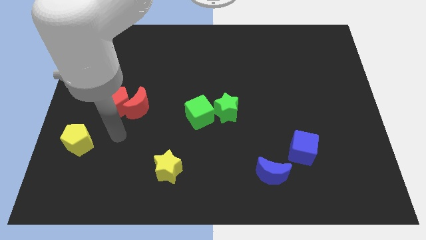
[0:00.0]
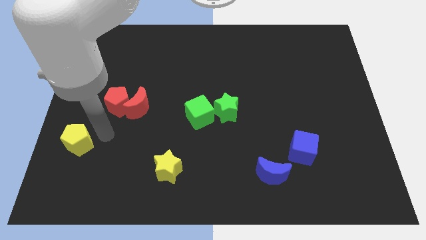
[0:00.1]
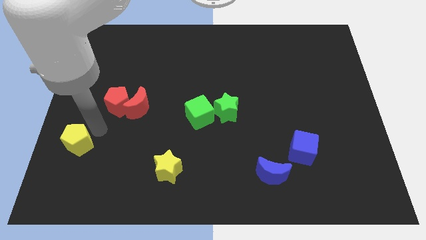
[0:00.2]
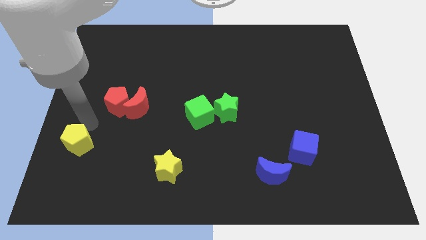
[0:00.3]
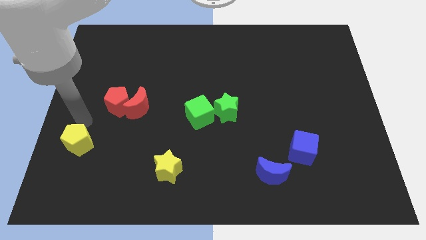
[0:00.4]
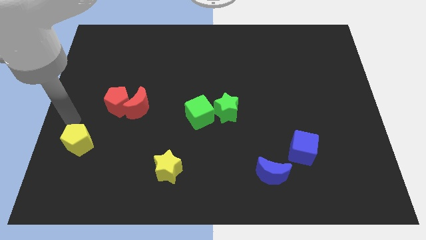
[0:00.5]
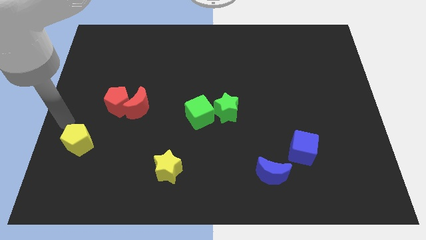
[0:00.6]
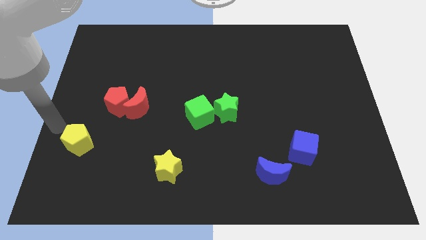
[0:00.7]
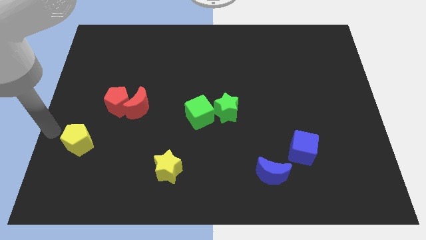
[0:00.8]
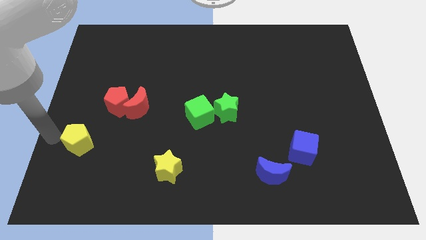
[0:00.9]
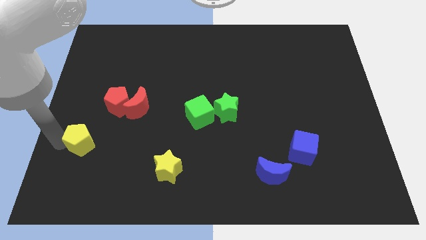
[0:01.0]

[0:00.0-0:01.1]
move the arm at the left side of the yellow pentagon

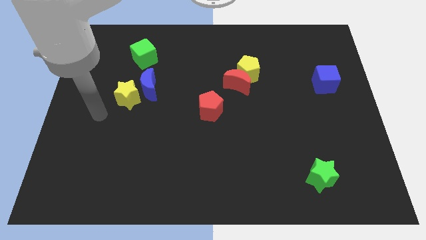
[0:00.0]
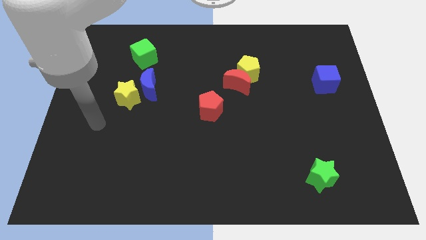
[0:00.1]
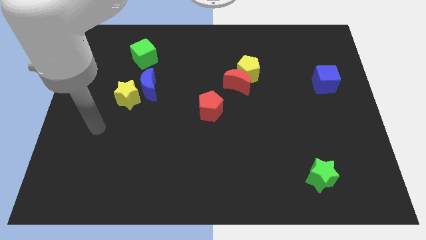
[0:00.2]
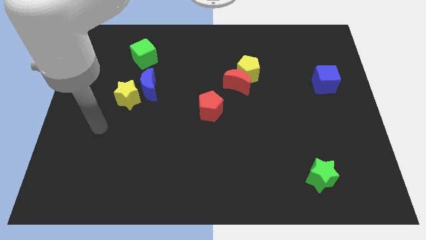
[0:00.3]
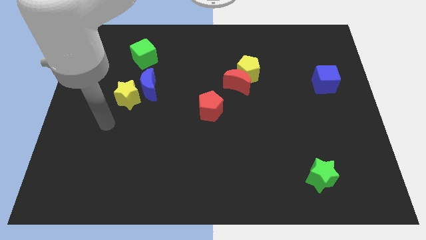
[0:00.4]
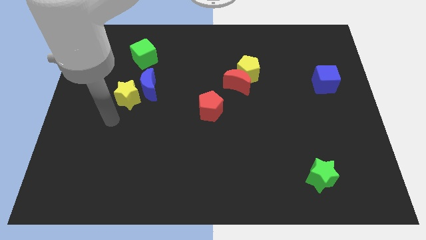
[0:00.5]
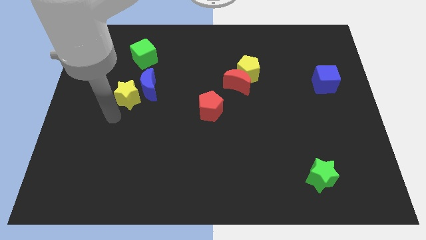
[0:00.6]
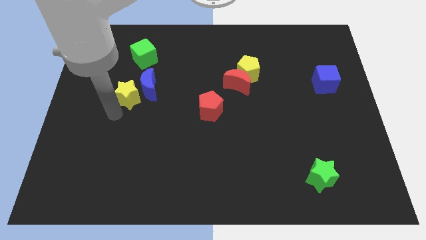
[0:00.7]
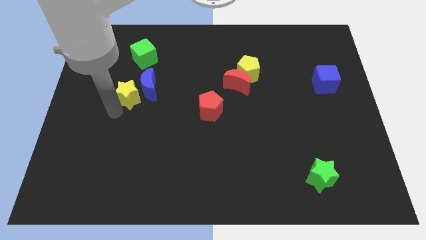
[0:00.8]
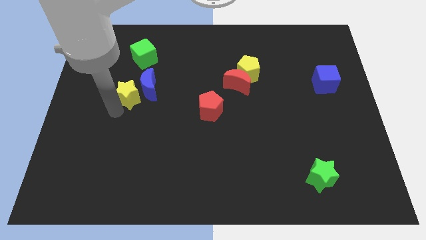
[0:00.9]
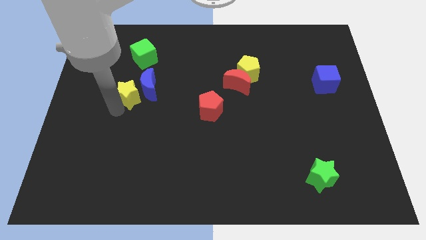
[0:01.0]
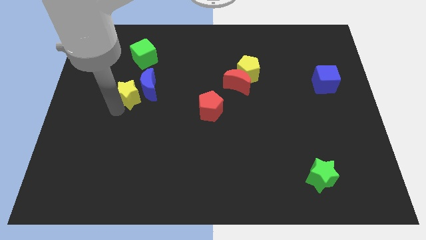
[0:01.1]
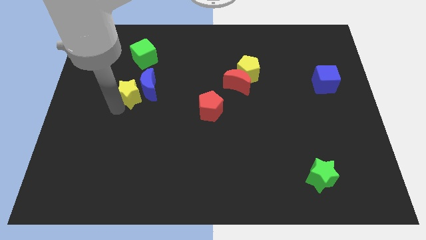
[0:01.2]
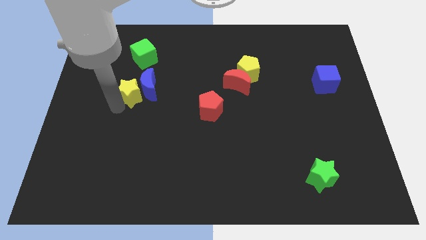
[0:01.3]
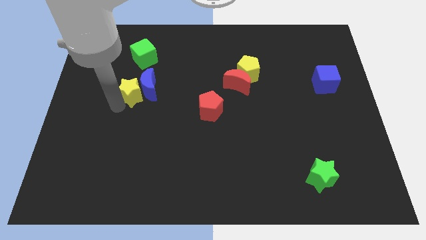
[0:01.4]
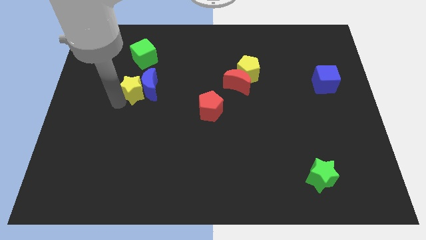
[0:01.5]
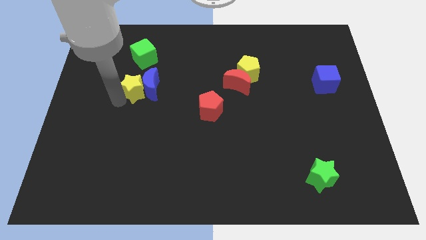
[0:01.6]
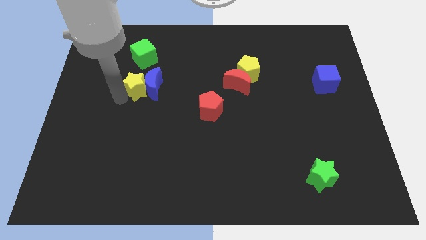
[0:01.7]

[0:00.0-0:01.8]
move the yellow star into the blue moon

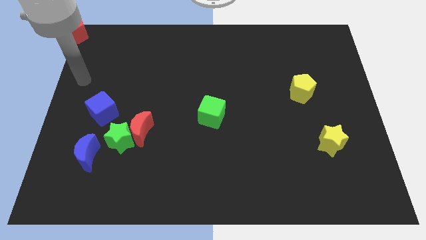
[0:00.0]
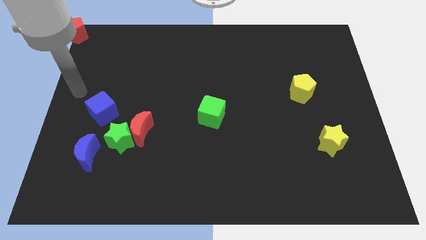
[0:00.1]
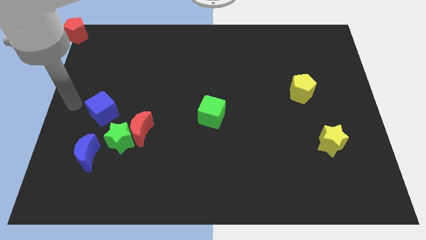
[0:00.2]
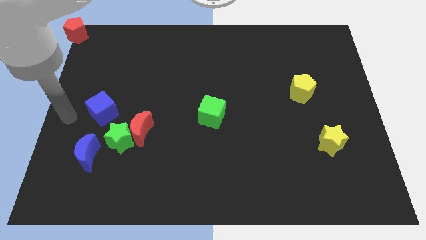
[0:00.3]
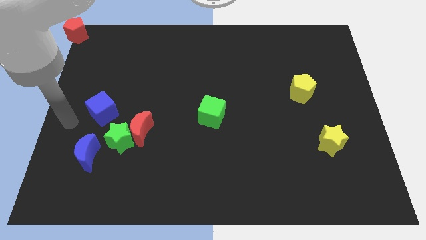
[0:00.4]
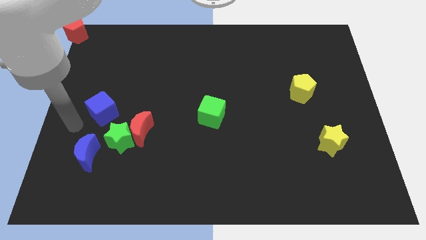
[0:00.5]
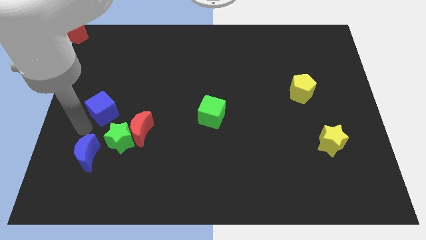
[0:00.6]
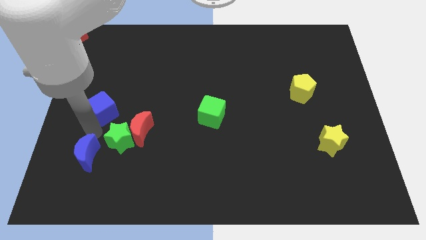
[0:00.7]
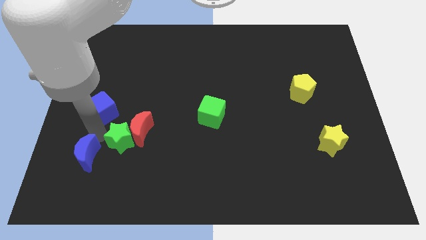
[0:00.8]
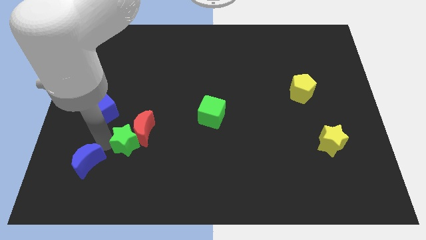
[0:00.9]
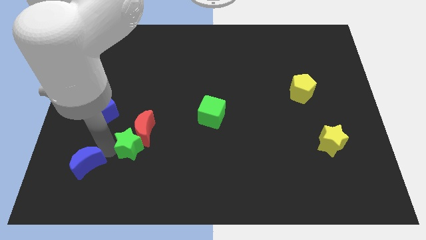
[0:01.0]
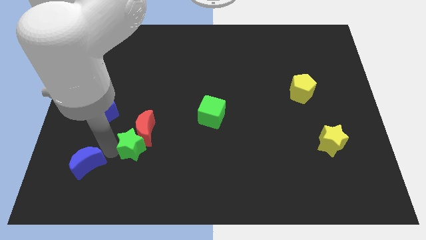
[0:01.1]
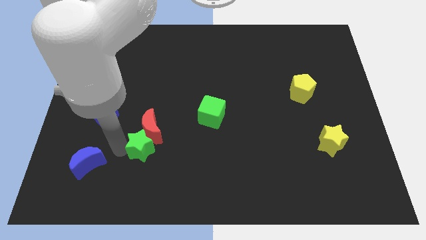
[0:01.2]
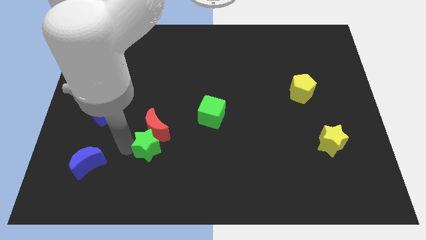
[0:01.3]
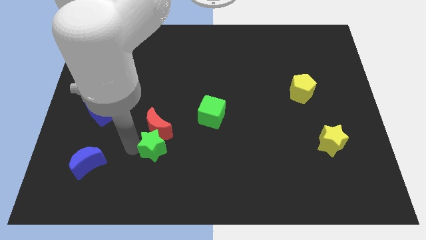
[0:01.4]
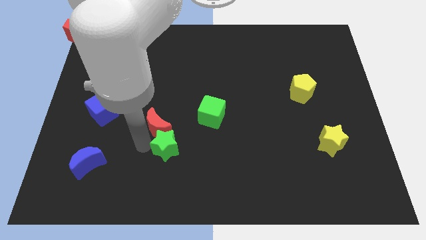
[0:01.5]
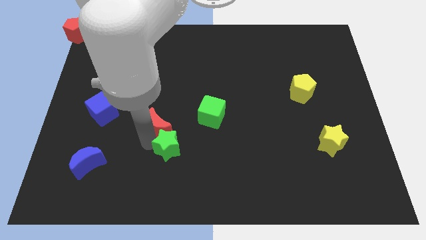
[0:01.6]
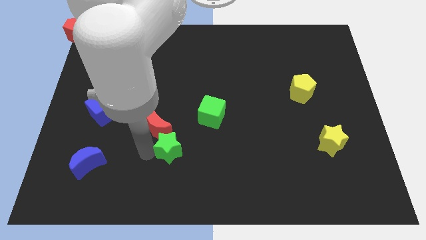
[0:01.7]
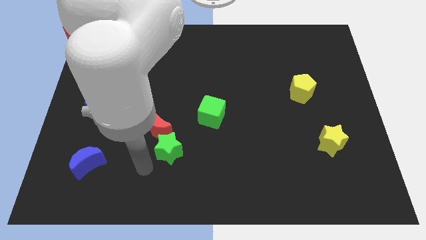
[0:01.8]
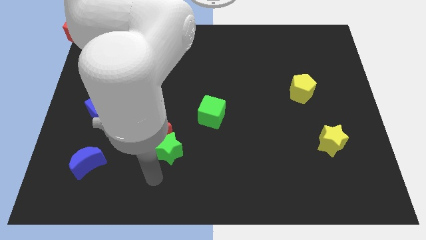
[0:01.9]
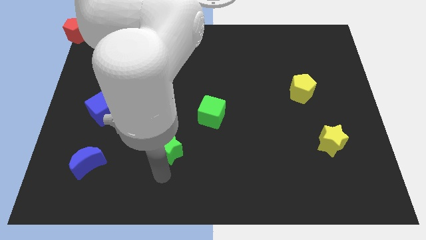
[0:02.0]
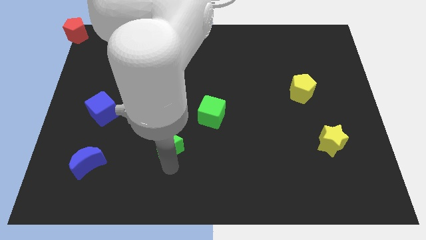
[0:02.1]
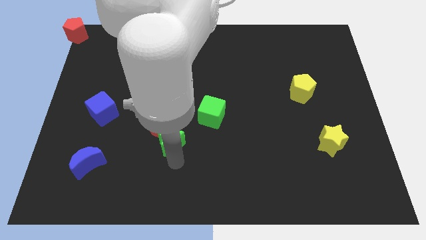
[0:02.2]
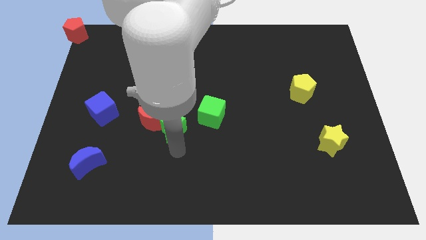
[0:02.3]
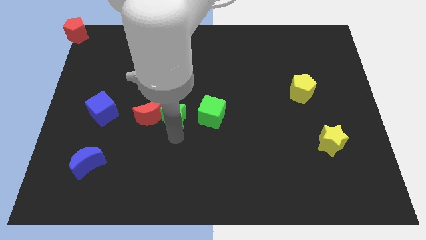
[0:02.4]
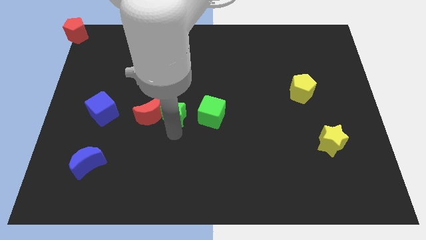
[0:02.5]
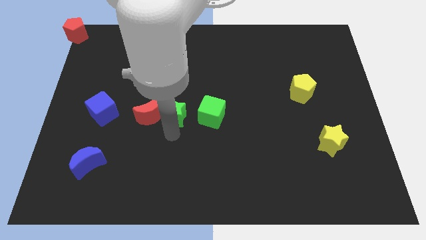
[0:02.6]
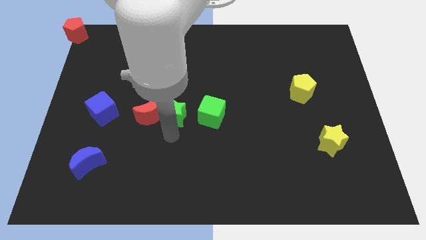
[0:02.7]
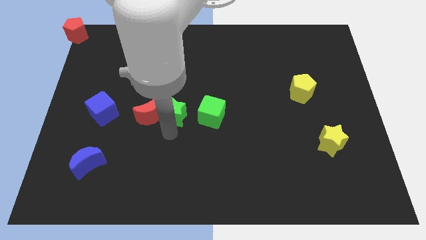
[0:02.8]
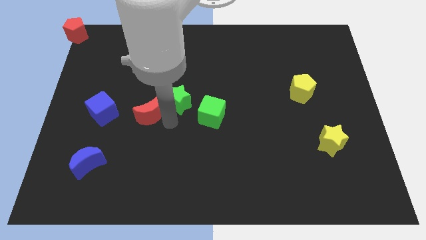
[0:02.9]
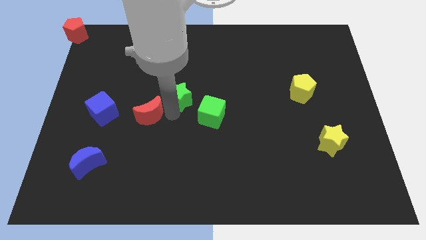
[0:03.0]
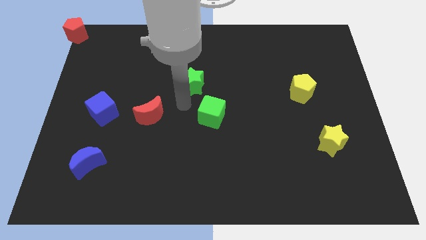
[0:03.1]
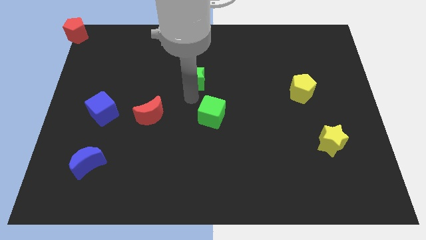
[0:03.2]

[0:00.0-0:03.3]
place the green star diagonally top left to the green cube

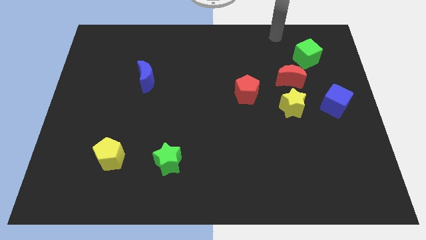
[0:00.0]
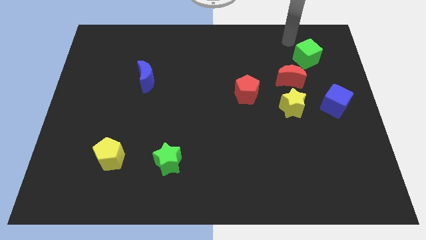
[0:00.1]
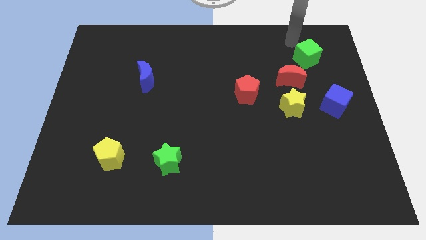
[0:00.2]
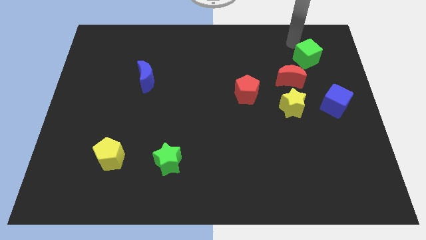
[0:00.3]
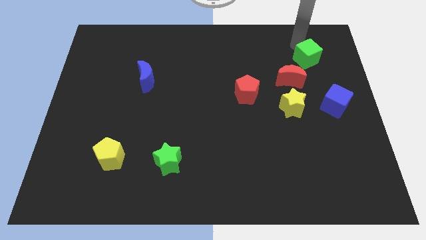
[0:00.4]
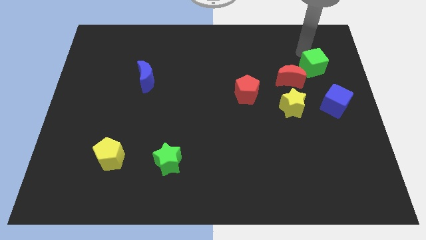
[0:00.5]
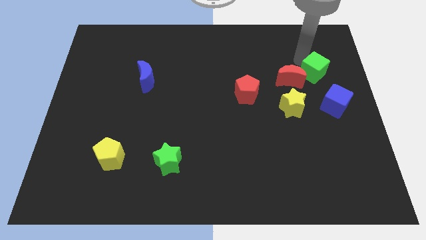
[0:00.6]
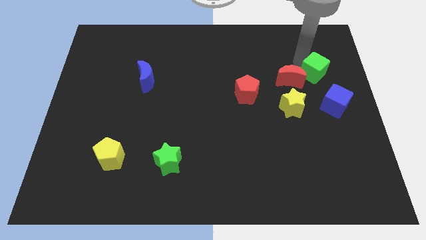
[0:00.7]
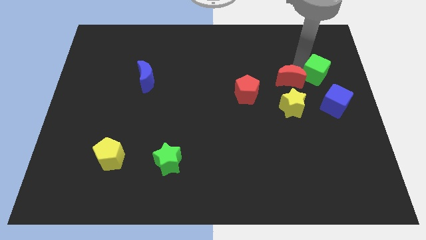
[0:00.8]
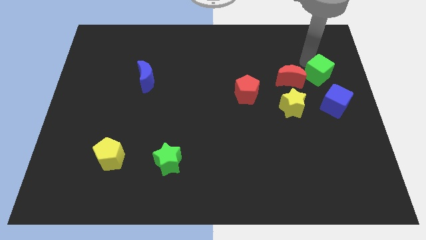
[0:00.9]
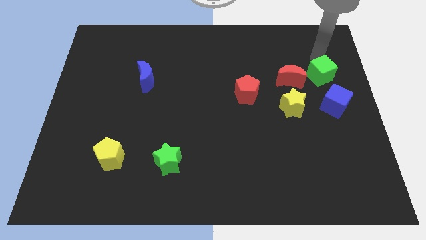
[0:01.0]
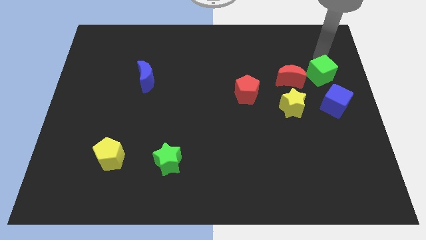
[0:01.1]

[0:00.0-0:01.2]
push the green star to the right of the red crescent

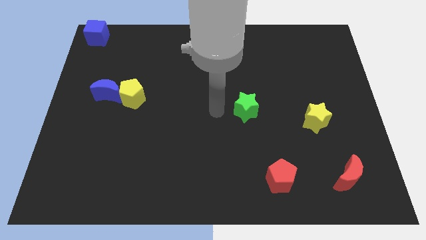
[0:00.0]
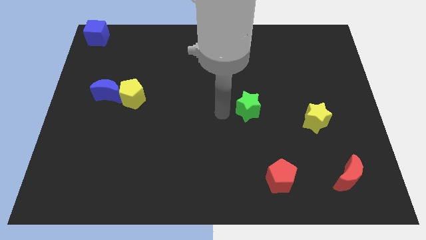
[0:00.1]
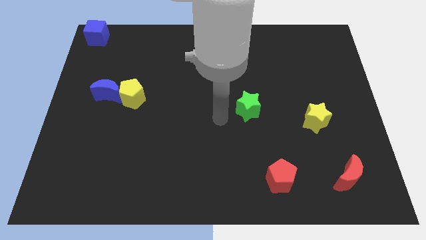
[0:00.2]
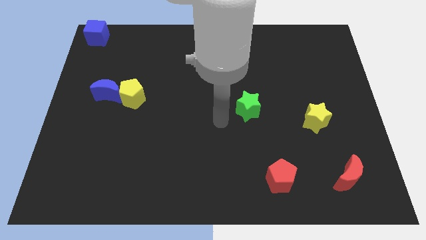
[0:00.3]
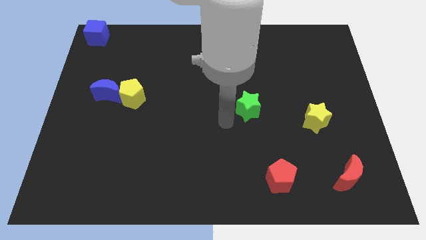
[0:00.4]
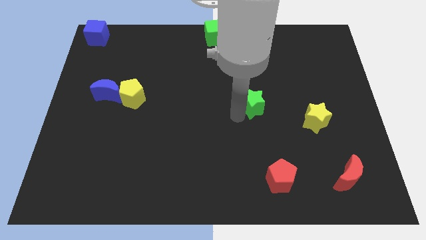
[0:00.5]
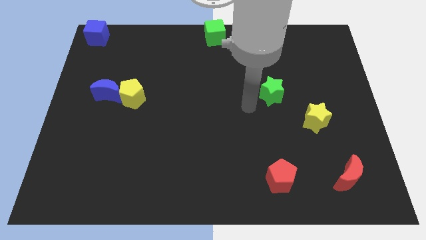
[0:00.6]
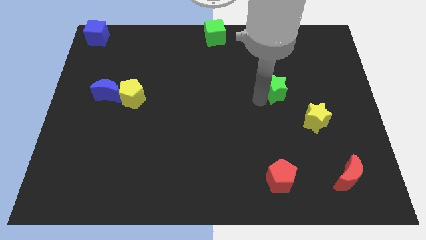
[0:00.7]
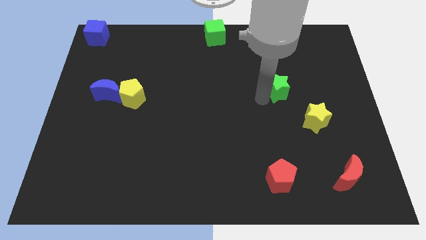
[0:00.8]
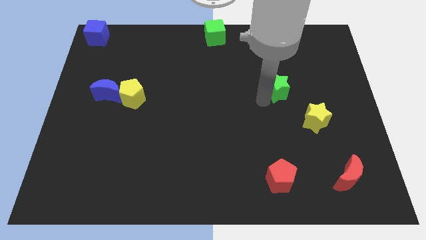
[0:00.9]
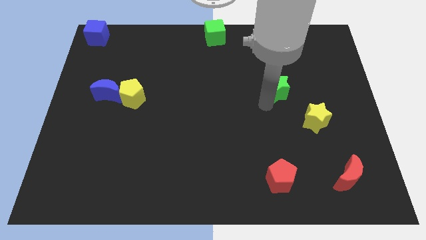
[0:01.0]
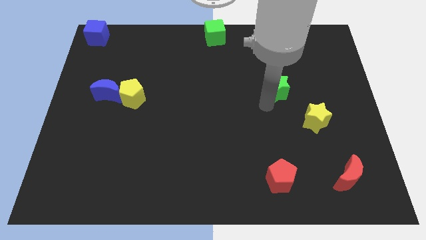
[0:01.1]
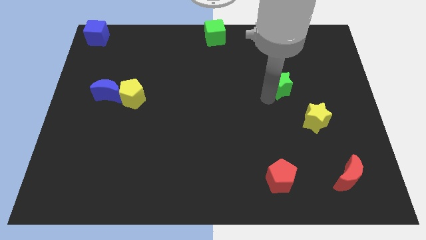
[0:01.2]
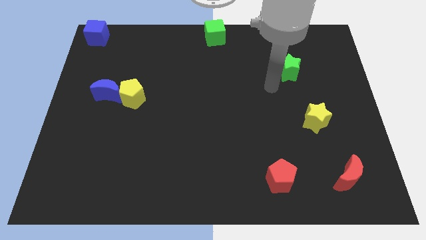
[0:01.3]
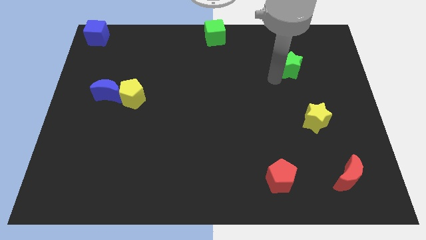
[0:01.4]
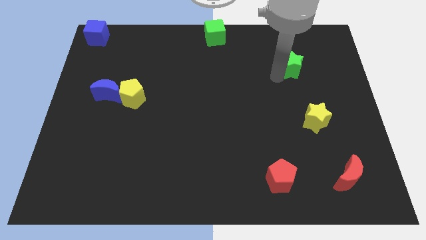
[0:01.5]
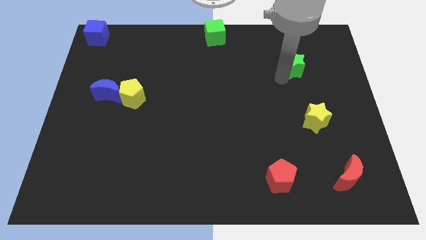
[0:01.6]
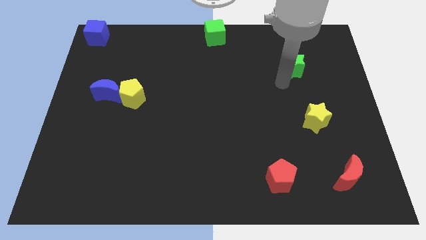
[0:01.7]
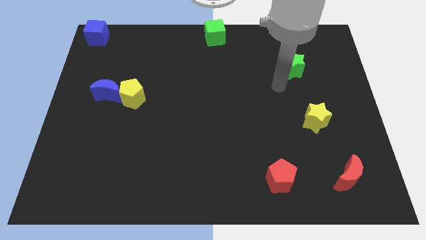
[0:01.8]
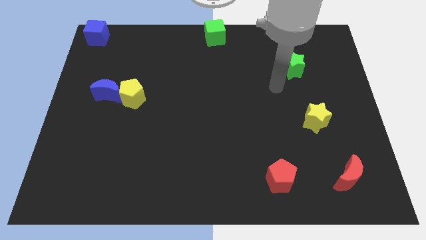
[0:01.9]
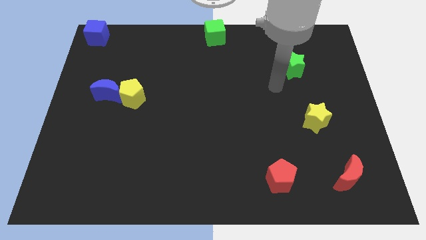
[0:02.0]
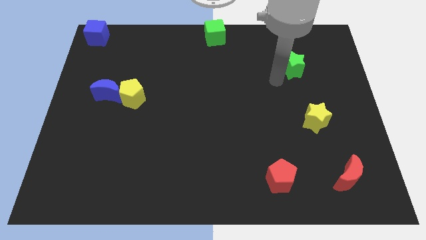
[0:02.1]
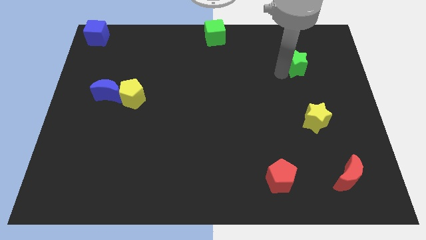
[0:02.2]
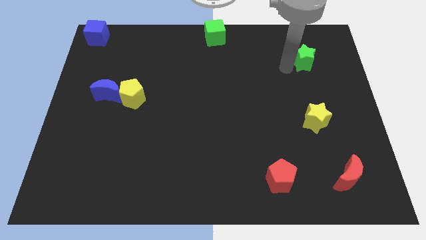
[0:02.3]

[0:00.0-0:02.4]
place the green star vertically above the yellow star
